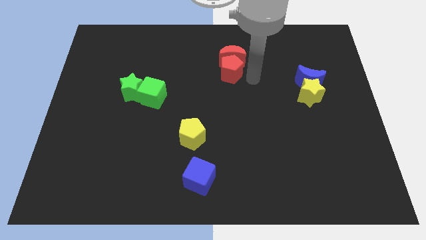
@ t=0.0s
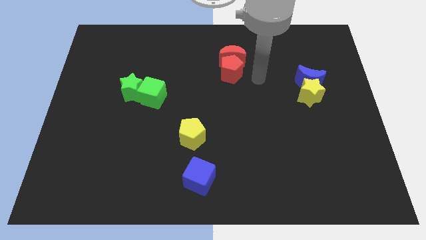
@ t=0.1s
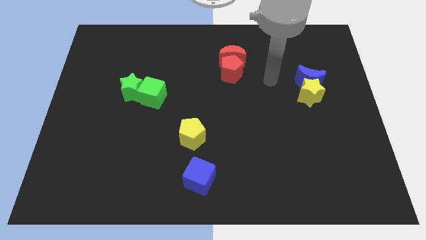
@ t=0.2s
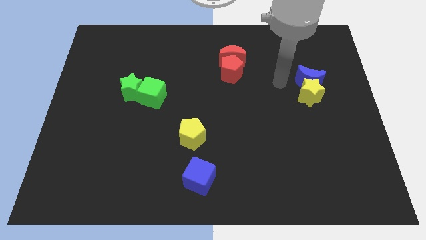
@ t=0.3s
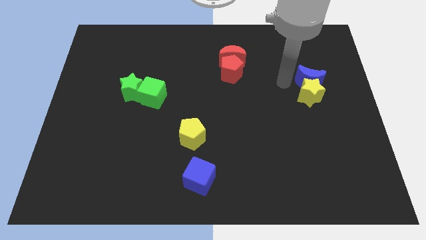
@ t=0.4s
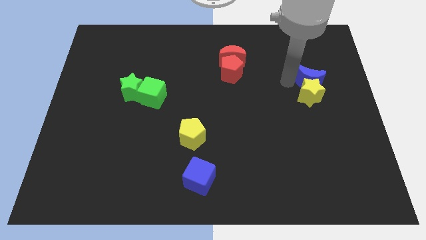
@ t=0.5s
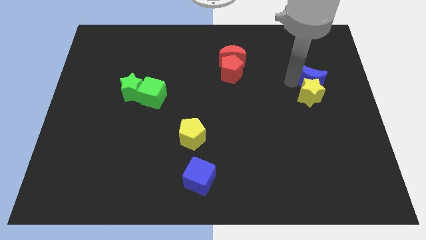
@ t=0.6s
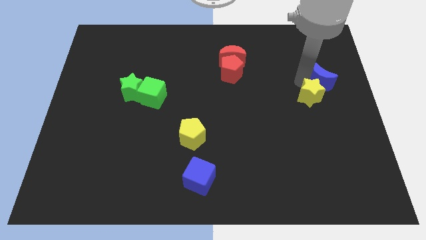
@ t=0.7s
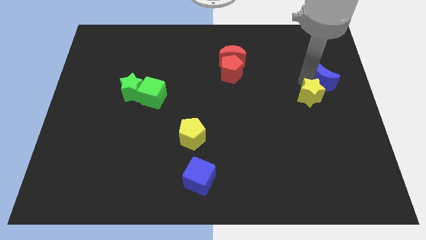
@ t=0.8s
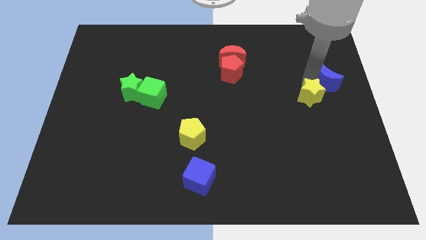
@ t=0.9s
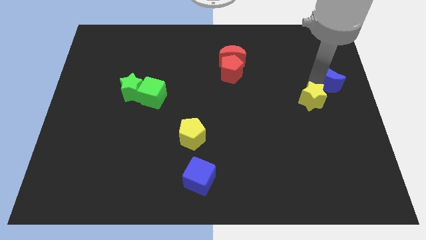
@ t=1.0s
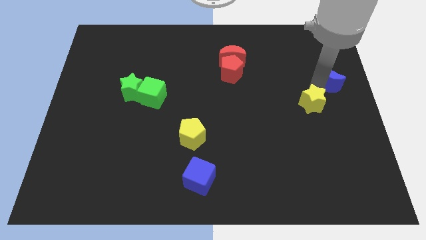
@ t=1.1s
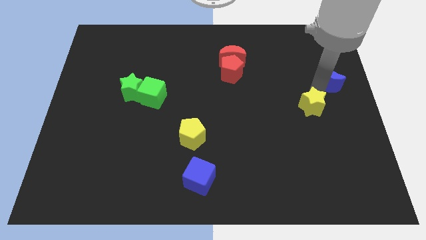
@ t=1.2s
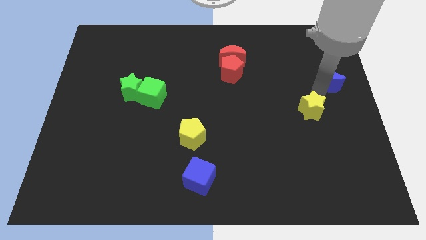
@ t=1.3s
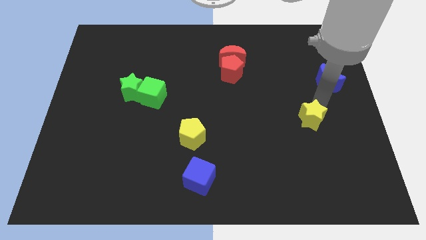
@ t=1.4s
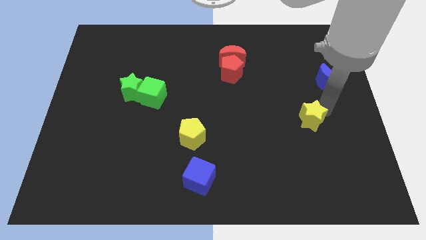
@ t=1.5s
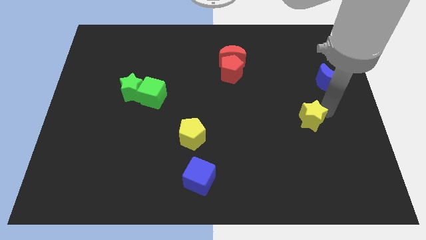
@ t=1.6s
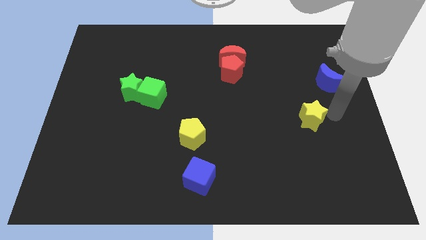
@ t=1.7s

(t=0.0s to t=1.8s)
separate the yellow star from the blue crescent

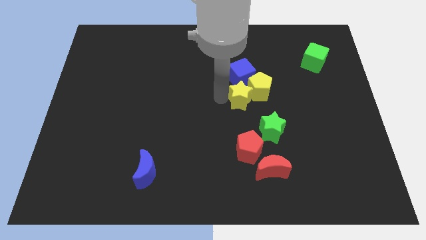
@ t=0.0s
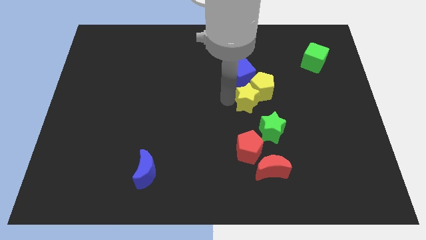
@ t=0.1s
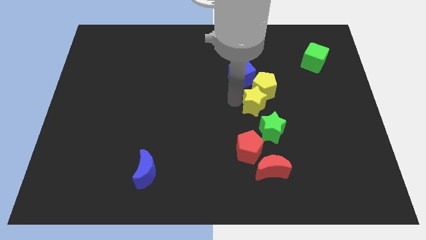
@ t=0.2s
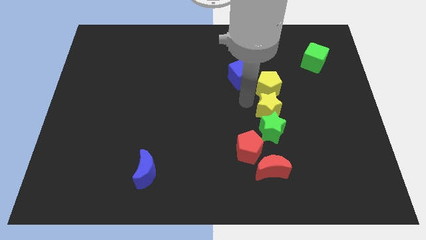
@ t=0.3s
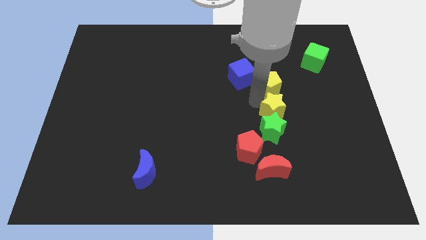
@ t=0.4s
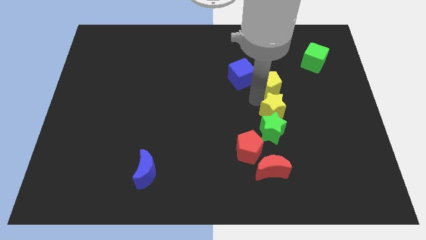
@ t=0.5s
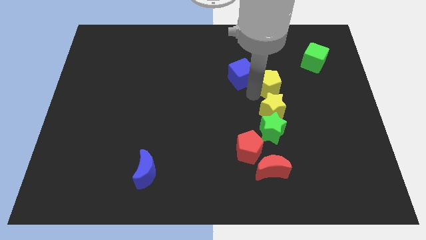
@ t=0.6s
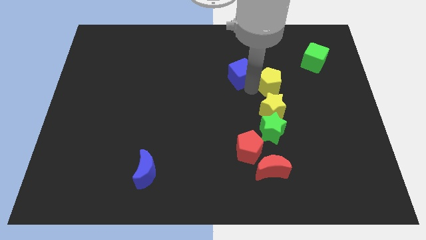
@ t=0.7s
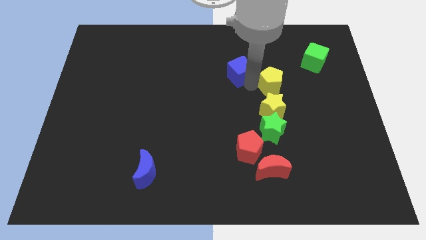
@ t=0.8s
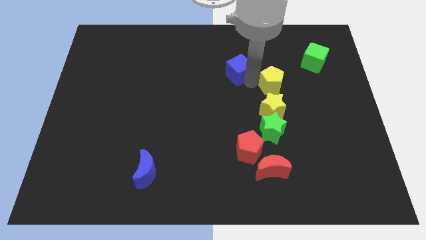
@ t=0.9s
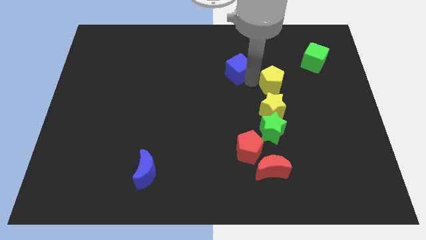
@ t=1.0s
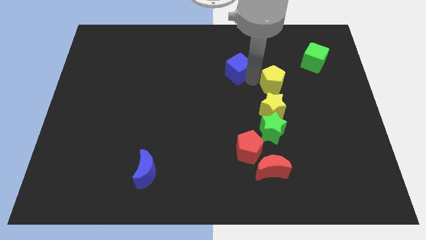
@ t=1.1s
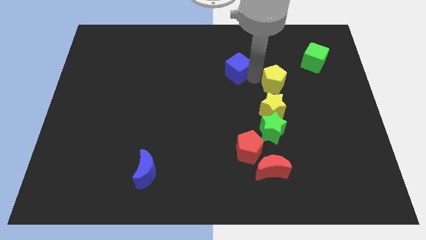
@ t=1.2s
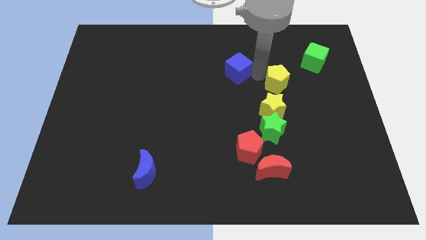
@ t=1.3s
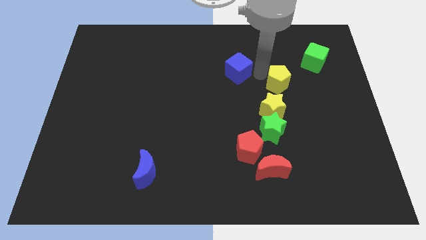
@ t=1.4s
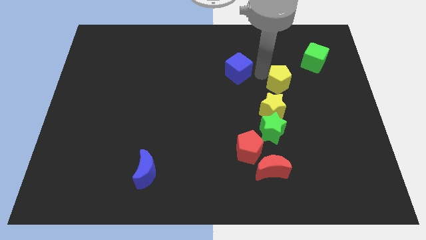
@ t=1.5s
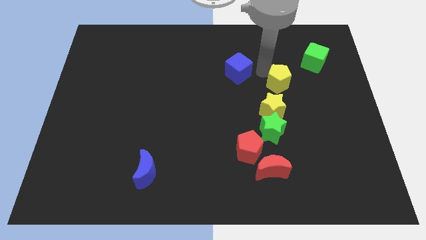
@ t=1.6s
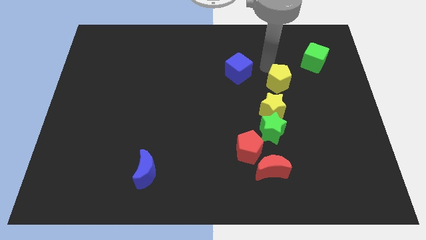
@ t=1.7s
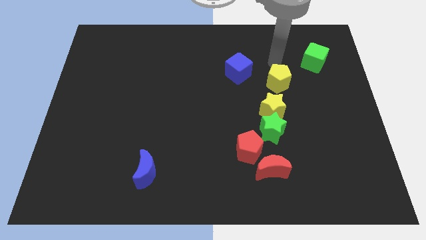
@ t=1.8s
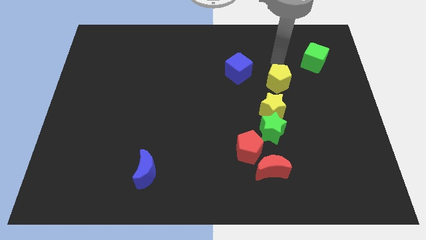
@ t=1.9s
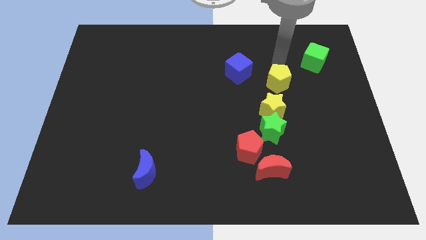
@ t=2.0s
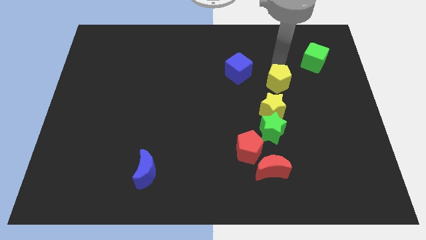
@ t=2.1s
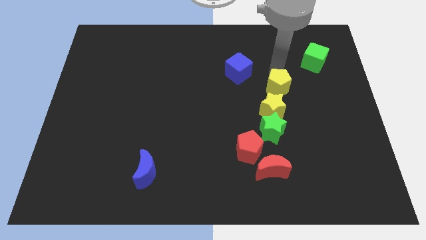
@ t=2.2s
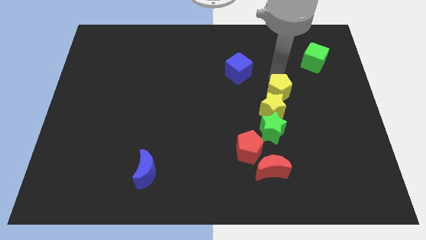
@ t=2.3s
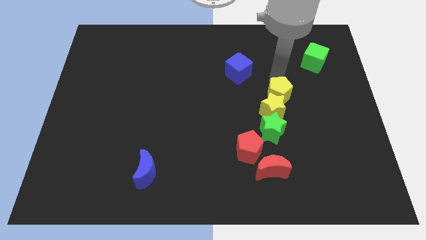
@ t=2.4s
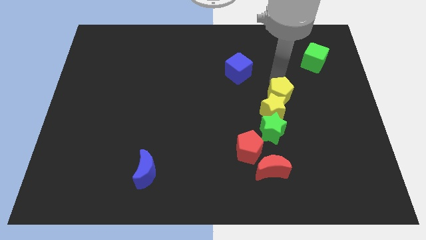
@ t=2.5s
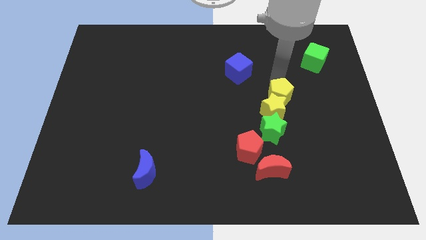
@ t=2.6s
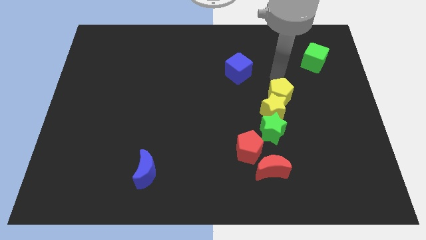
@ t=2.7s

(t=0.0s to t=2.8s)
place the yellow star in between the yellow pentagon and the green star

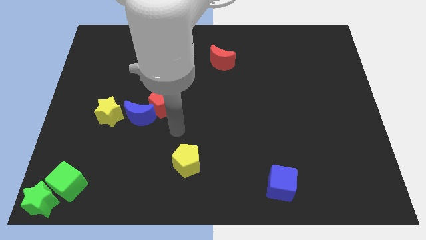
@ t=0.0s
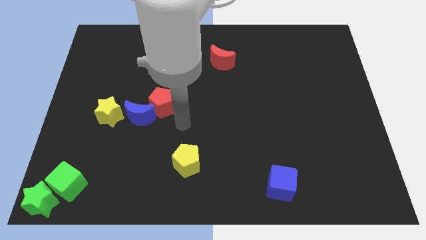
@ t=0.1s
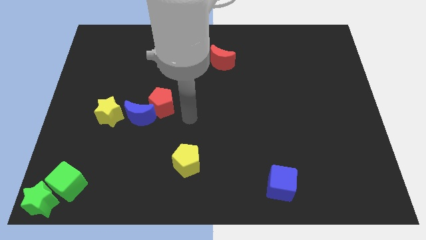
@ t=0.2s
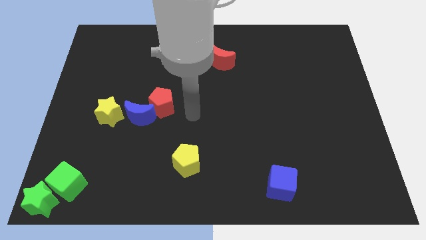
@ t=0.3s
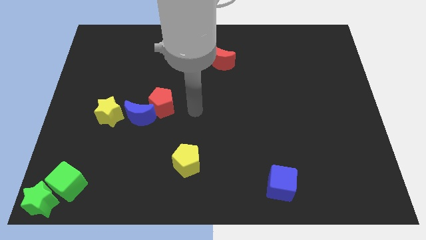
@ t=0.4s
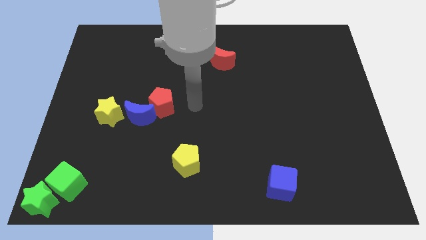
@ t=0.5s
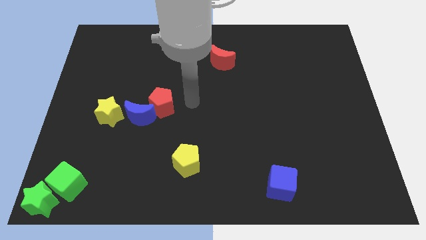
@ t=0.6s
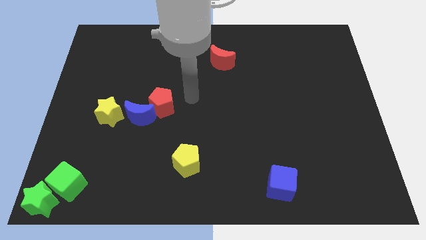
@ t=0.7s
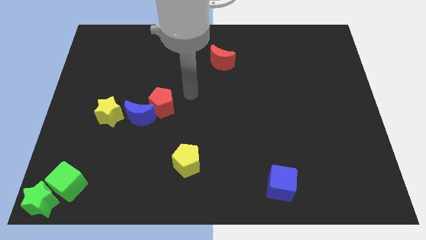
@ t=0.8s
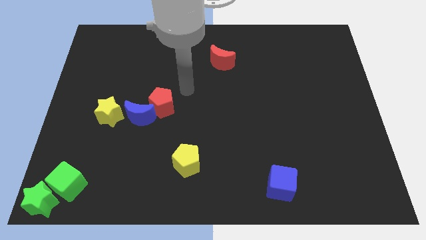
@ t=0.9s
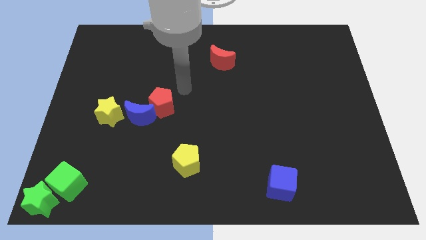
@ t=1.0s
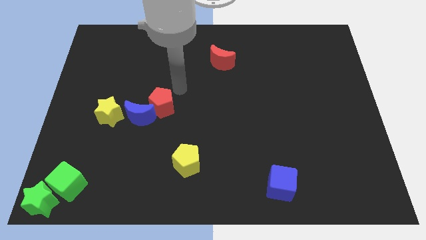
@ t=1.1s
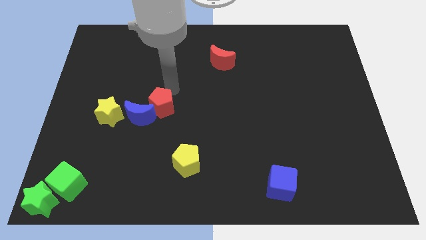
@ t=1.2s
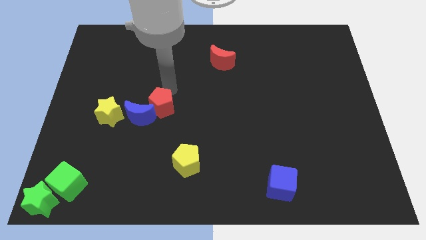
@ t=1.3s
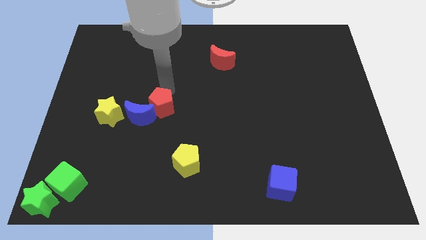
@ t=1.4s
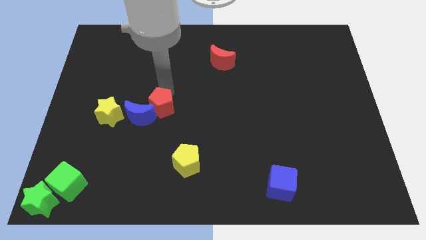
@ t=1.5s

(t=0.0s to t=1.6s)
move your arm to the top of red pentagon

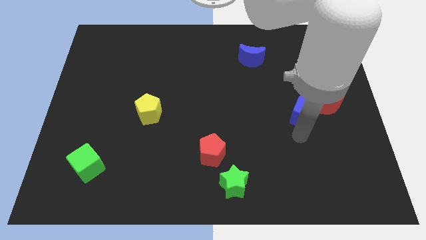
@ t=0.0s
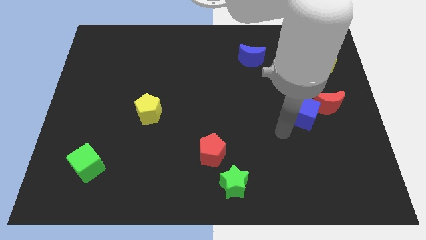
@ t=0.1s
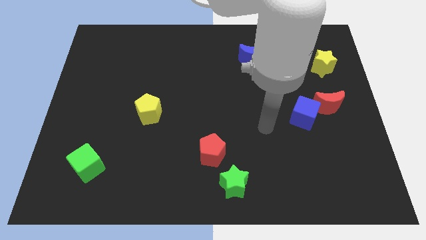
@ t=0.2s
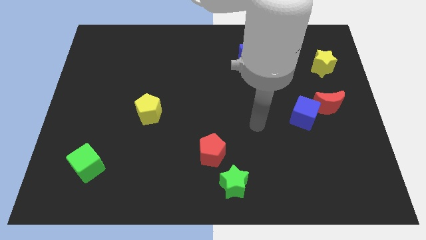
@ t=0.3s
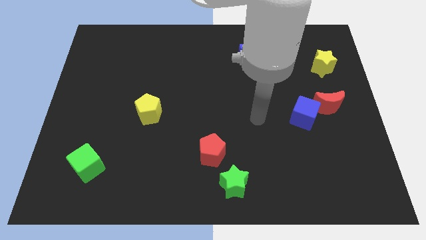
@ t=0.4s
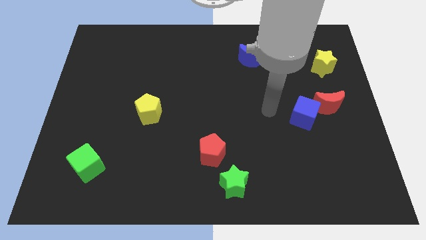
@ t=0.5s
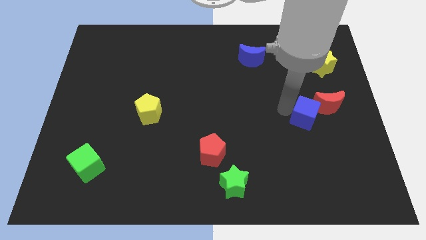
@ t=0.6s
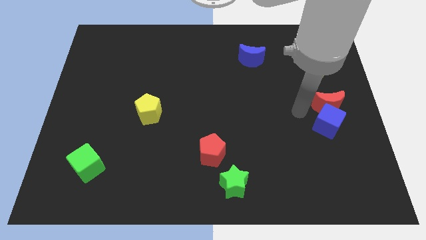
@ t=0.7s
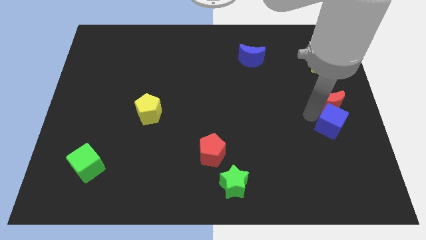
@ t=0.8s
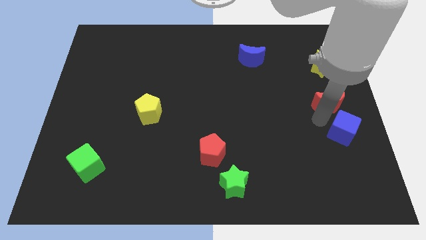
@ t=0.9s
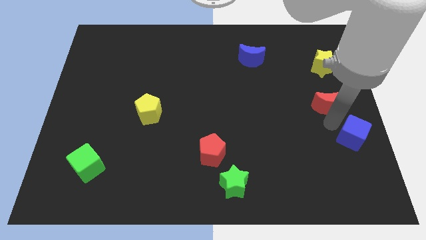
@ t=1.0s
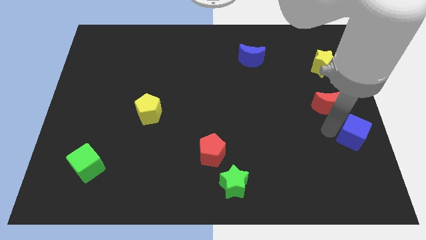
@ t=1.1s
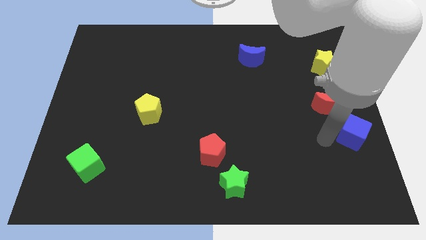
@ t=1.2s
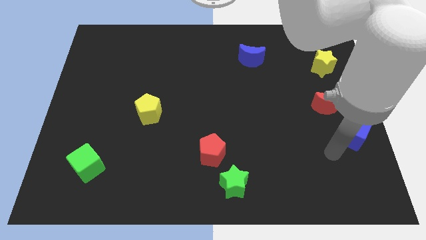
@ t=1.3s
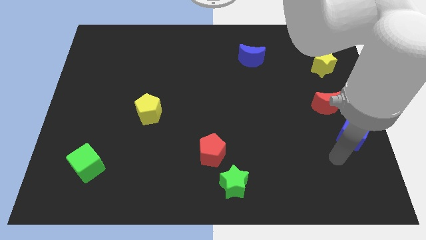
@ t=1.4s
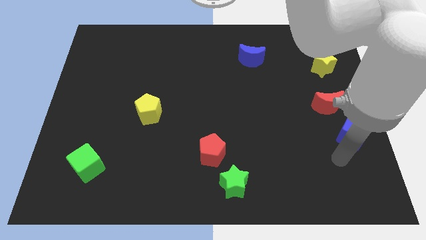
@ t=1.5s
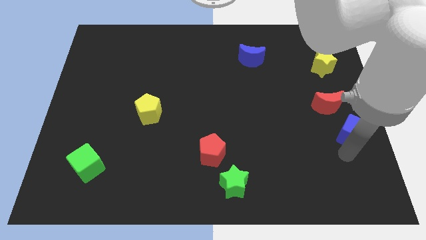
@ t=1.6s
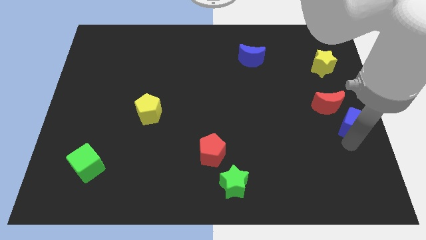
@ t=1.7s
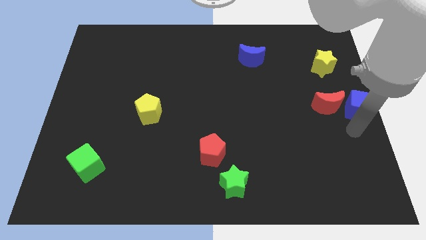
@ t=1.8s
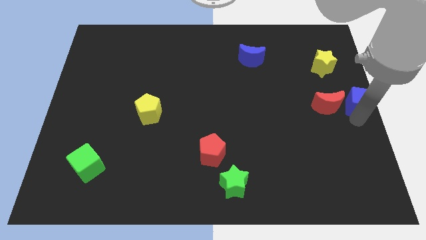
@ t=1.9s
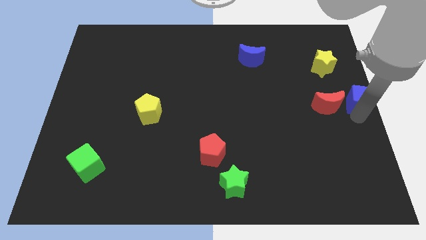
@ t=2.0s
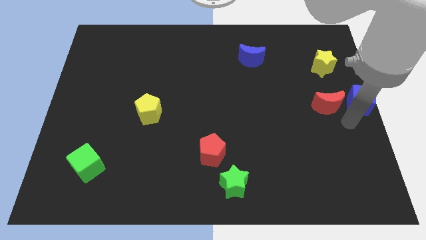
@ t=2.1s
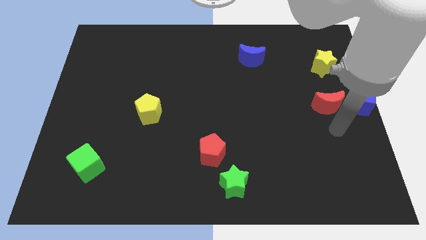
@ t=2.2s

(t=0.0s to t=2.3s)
place the blue cube to the right of red moon

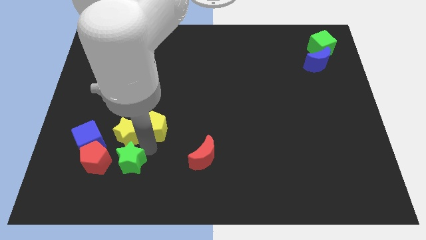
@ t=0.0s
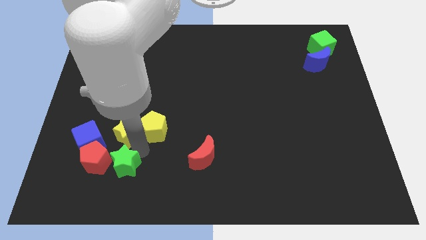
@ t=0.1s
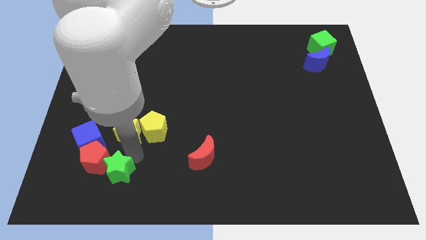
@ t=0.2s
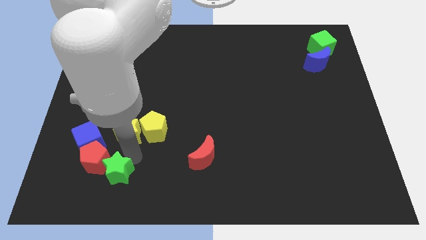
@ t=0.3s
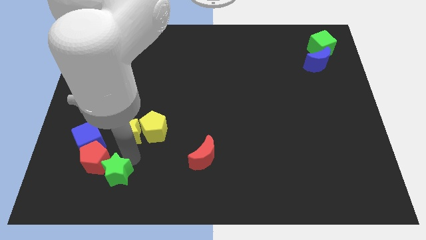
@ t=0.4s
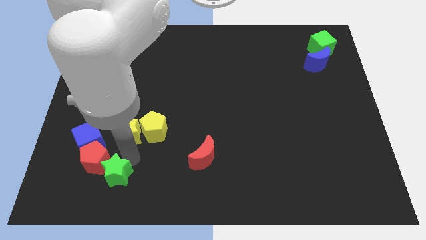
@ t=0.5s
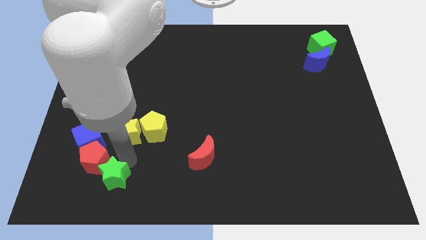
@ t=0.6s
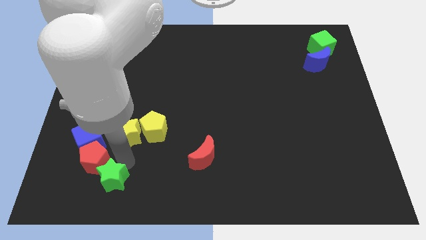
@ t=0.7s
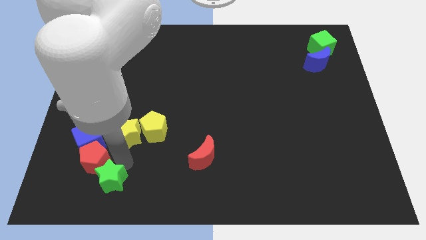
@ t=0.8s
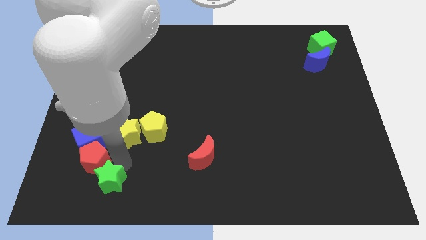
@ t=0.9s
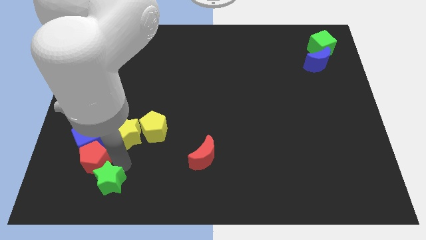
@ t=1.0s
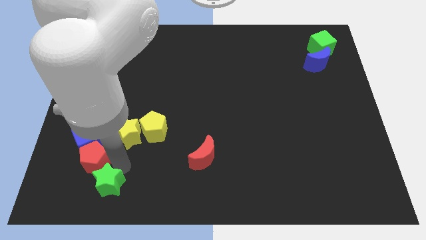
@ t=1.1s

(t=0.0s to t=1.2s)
place the green star below the red pentagon to form a diagonal line
